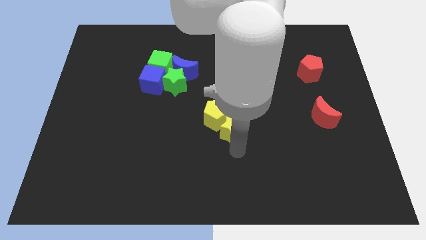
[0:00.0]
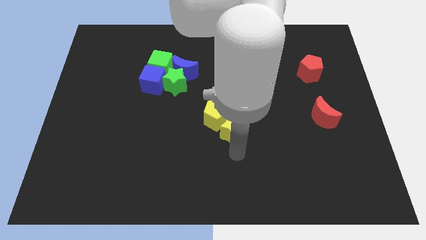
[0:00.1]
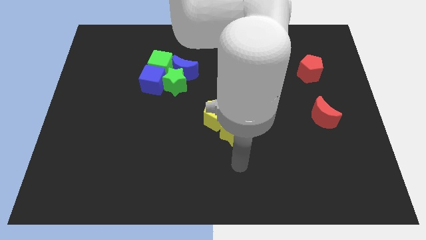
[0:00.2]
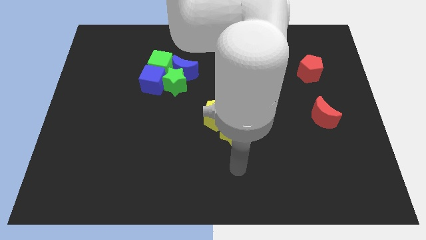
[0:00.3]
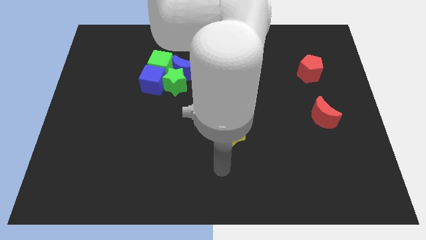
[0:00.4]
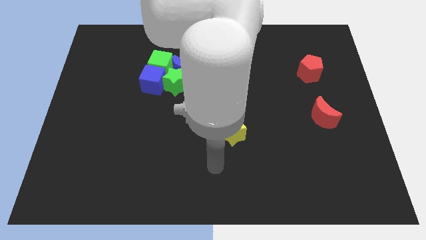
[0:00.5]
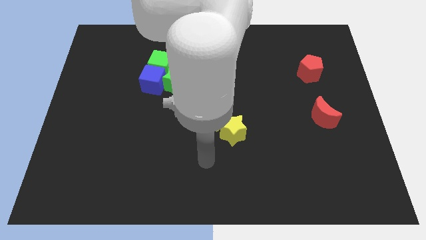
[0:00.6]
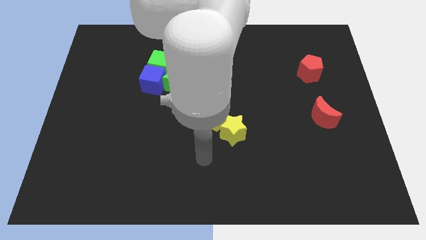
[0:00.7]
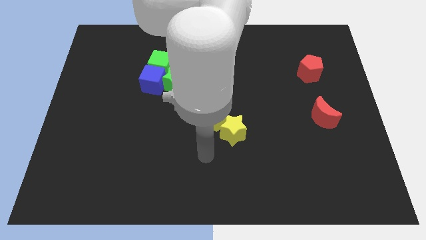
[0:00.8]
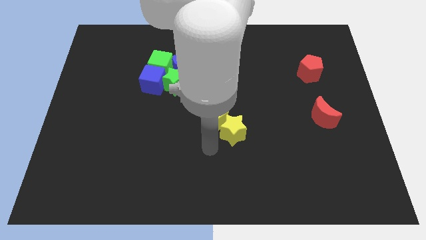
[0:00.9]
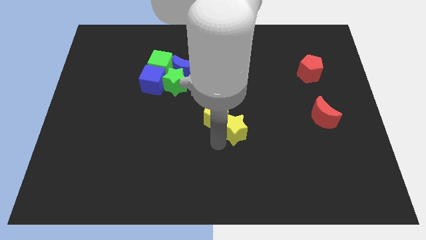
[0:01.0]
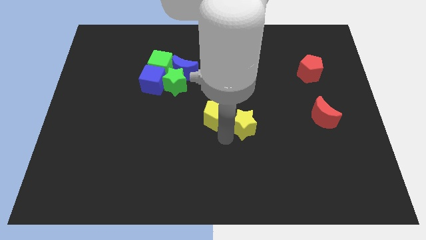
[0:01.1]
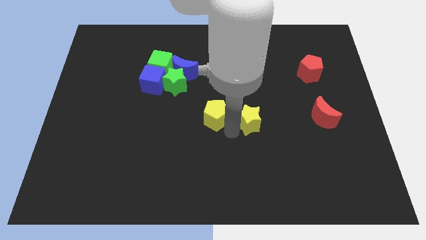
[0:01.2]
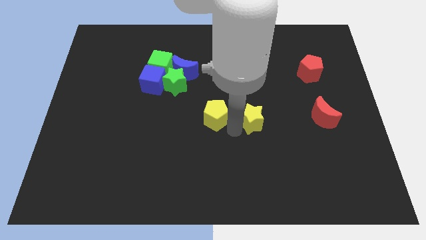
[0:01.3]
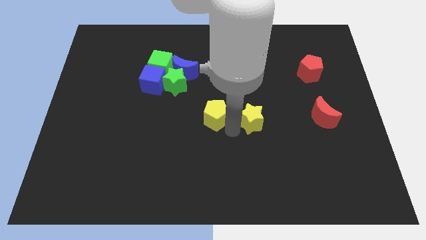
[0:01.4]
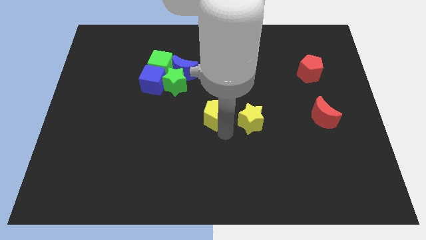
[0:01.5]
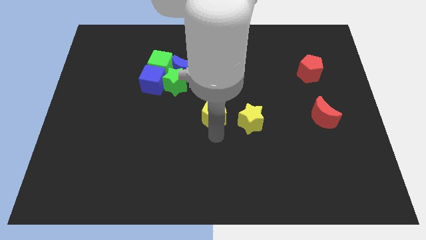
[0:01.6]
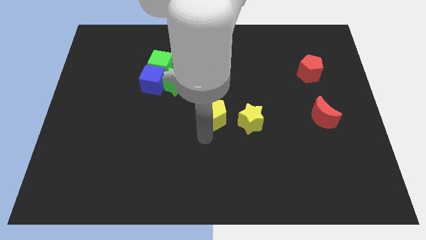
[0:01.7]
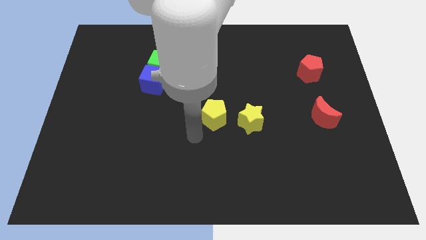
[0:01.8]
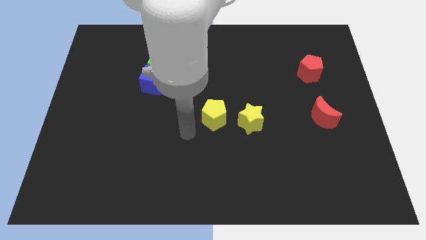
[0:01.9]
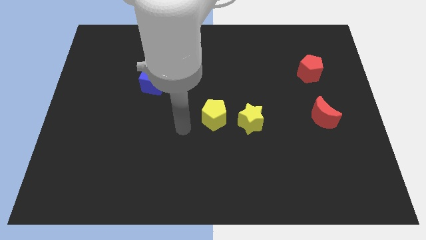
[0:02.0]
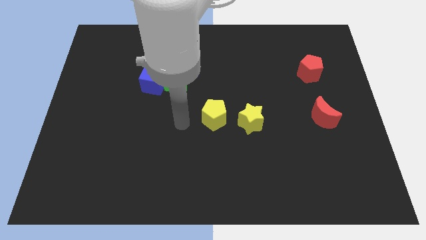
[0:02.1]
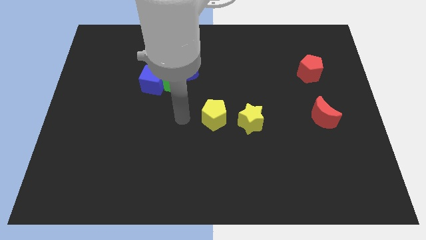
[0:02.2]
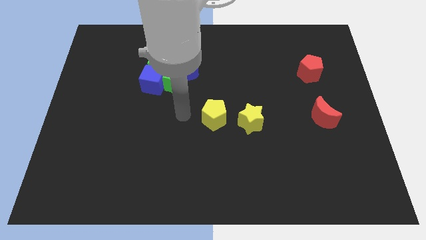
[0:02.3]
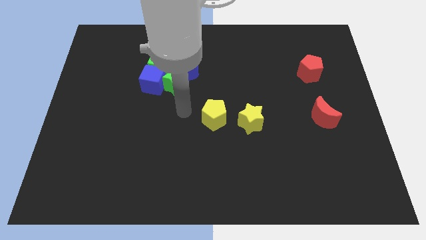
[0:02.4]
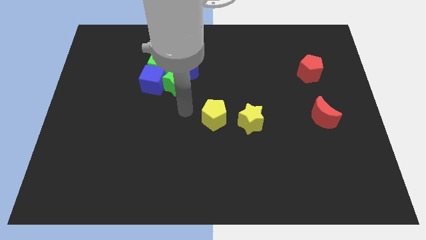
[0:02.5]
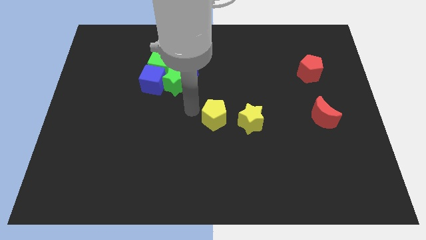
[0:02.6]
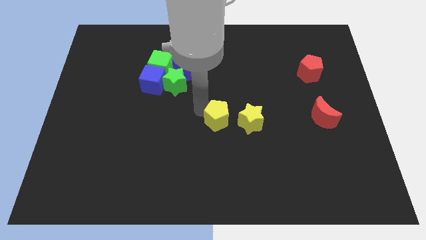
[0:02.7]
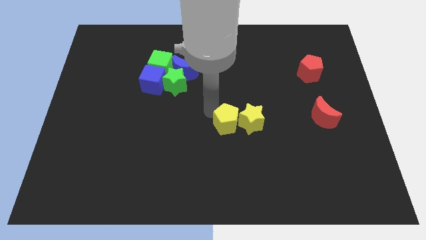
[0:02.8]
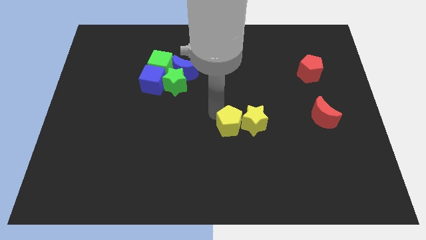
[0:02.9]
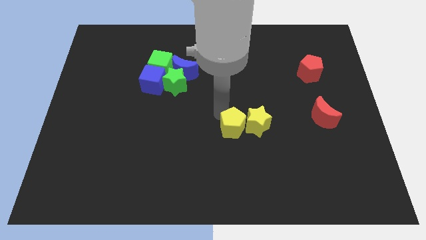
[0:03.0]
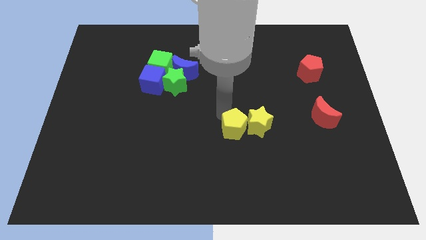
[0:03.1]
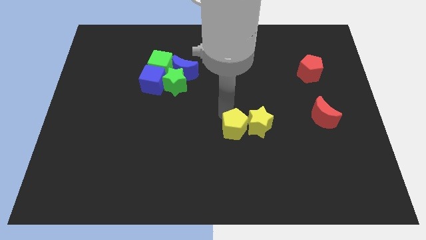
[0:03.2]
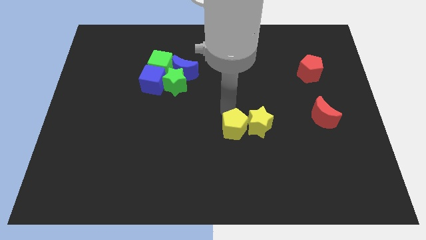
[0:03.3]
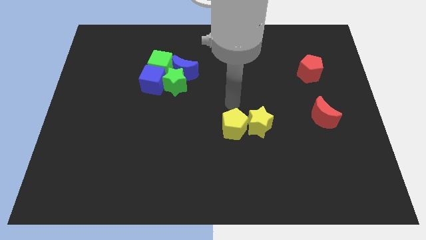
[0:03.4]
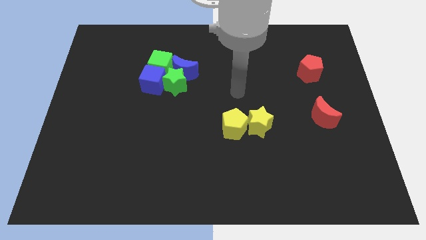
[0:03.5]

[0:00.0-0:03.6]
push the yellow pentagon into the yellow star

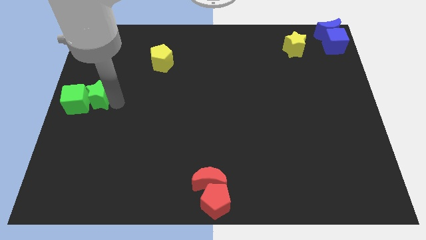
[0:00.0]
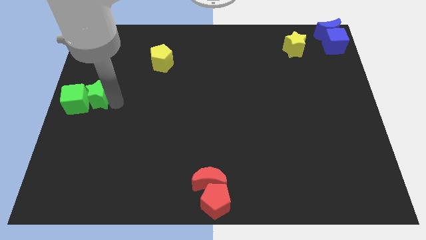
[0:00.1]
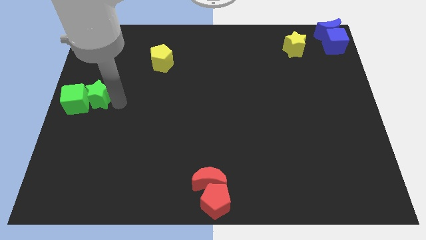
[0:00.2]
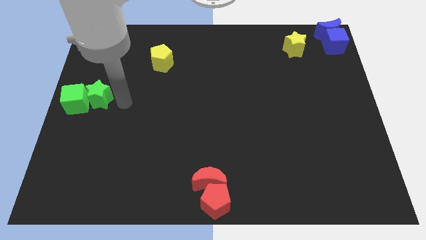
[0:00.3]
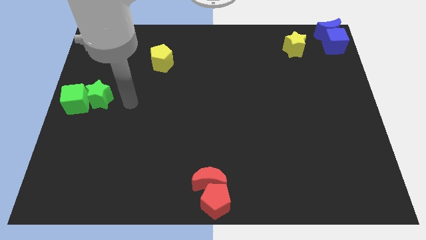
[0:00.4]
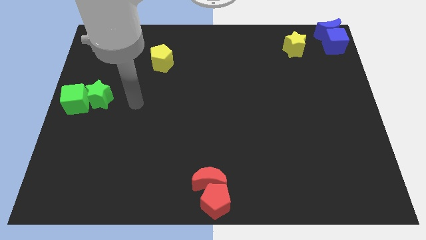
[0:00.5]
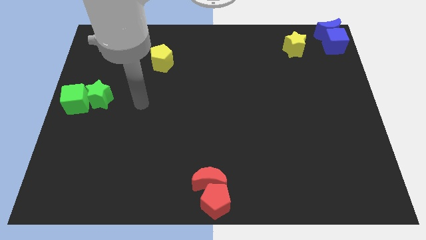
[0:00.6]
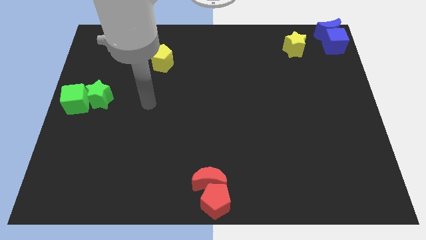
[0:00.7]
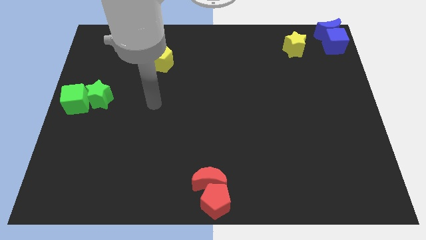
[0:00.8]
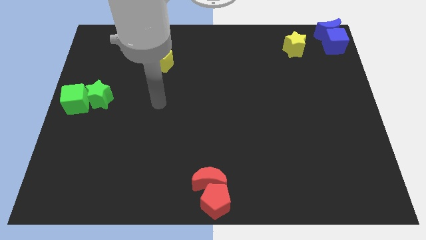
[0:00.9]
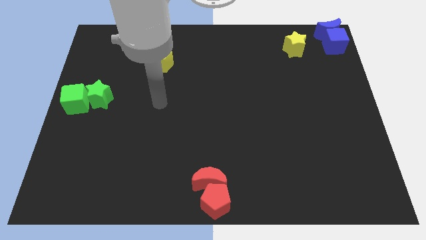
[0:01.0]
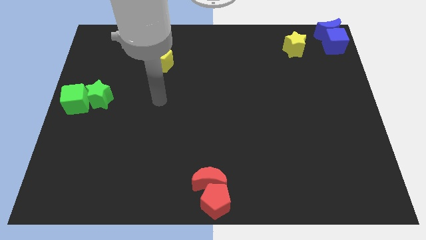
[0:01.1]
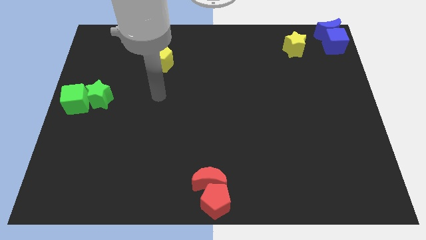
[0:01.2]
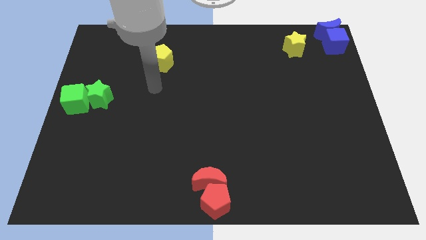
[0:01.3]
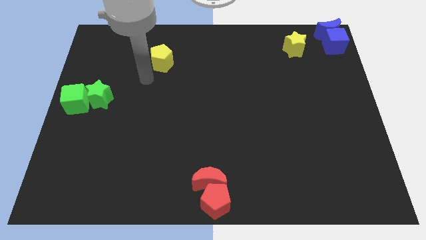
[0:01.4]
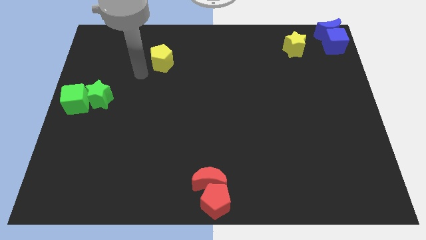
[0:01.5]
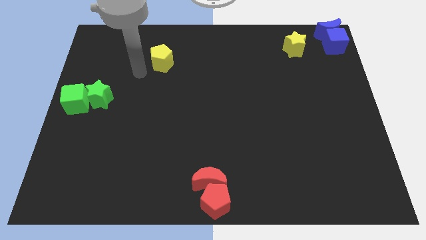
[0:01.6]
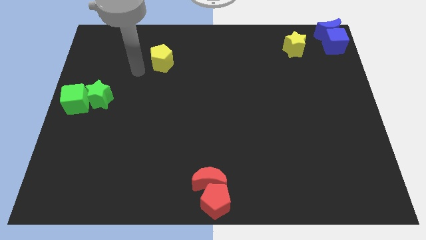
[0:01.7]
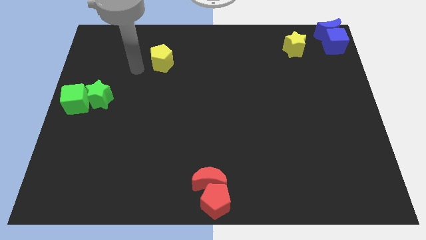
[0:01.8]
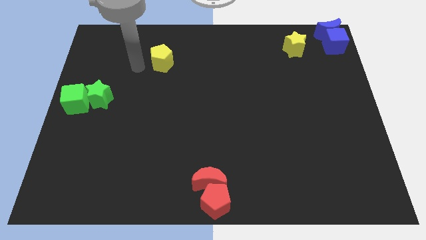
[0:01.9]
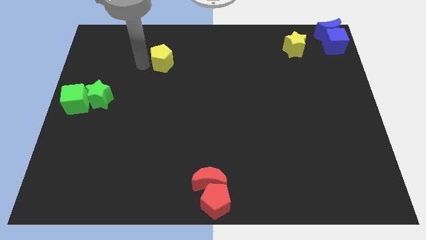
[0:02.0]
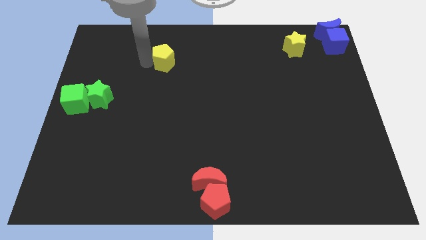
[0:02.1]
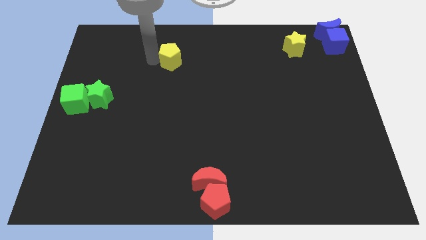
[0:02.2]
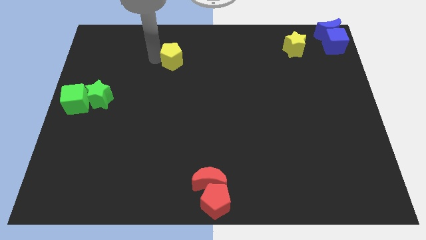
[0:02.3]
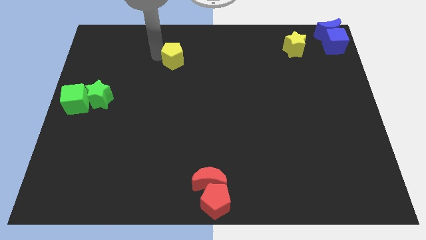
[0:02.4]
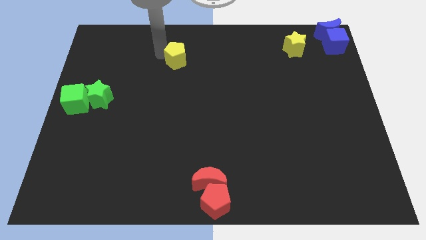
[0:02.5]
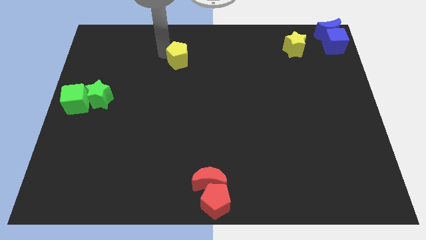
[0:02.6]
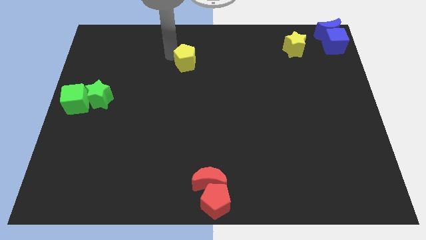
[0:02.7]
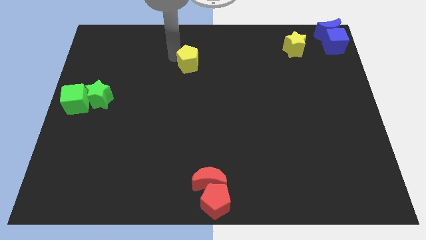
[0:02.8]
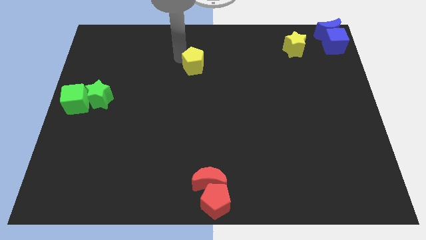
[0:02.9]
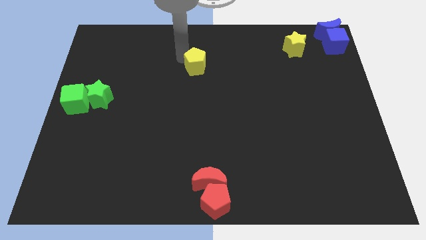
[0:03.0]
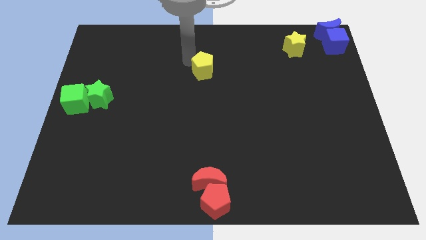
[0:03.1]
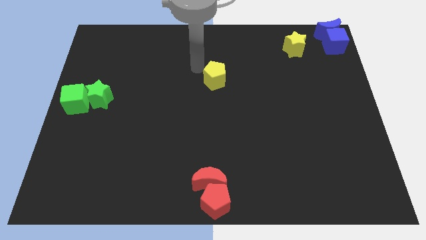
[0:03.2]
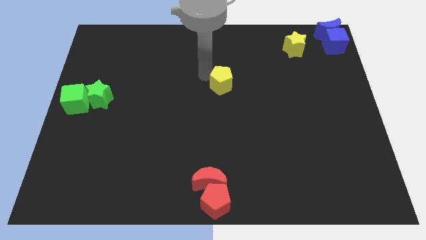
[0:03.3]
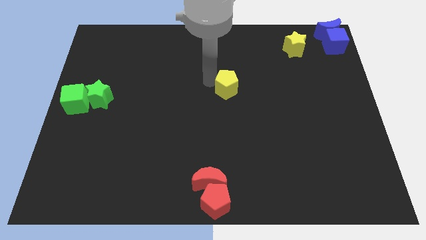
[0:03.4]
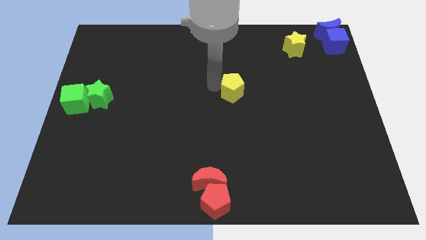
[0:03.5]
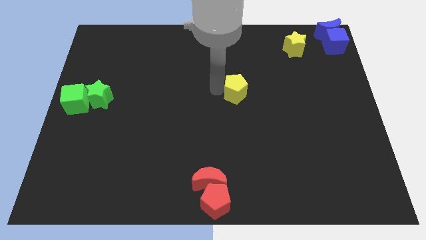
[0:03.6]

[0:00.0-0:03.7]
move the yellow pentagon towards the top center of the board

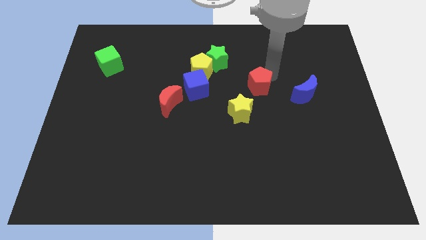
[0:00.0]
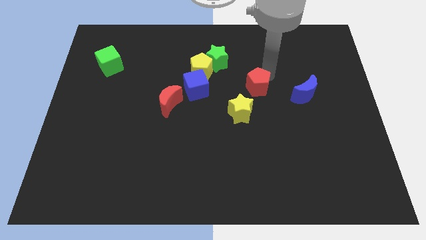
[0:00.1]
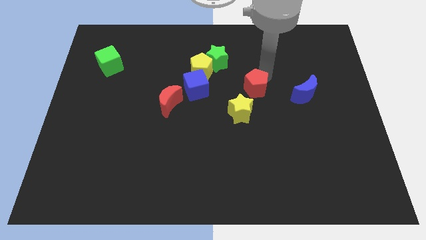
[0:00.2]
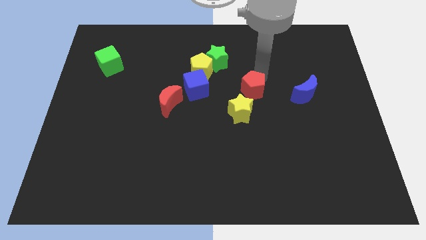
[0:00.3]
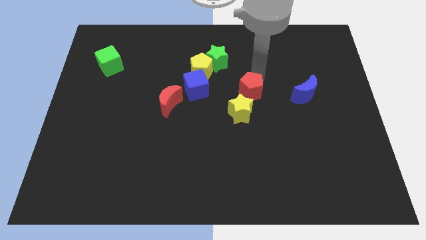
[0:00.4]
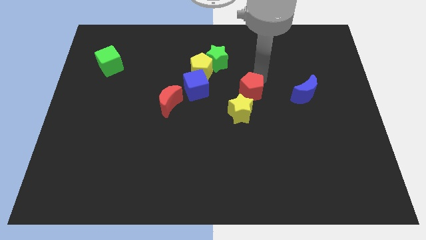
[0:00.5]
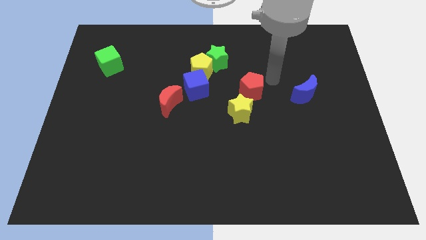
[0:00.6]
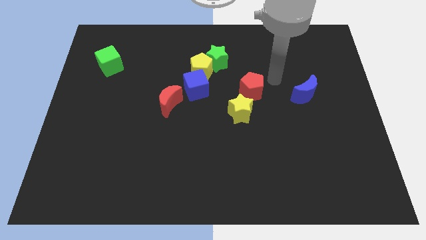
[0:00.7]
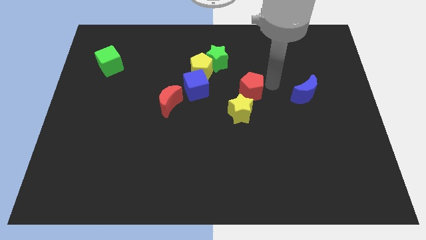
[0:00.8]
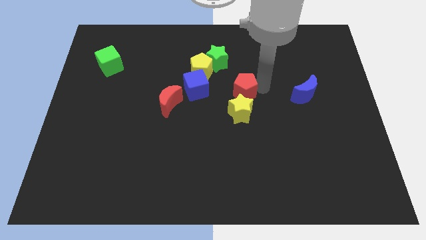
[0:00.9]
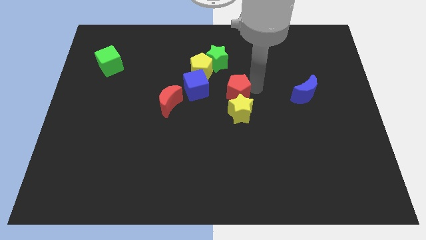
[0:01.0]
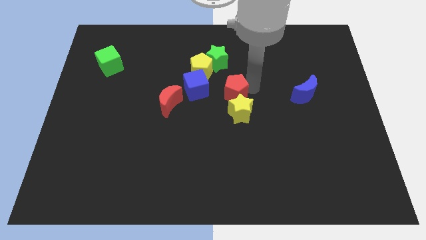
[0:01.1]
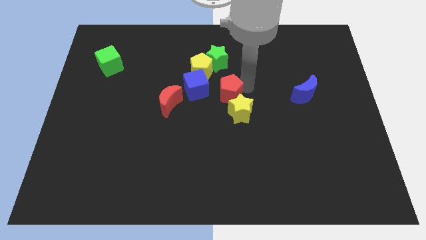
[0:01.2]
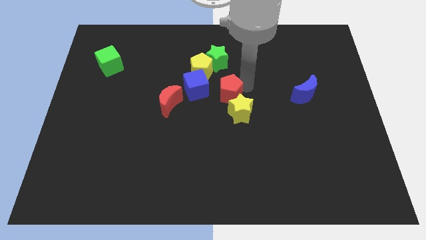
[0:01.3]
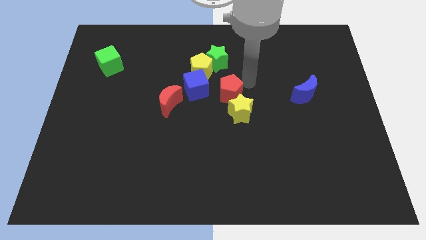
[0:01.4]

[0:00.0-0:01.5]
push the red pentagon to the right of the blue cube

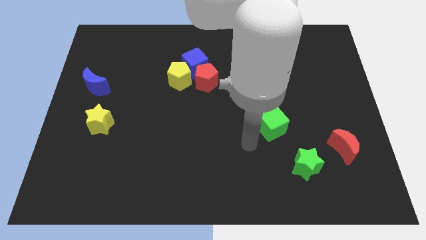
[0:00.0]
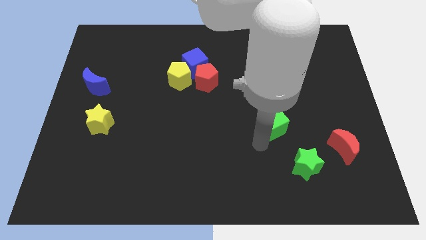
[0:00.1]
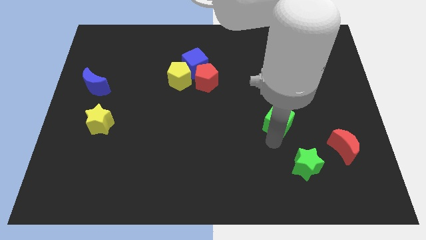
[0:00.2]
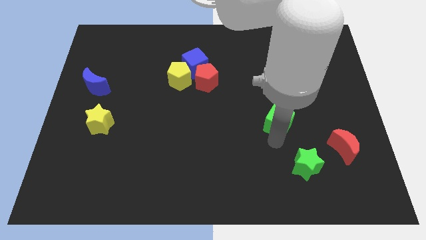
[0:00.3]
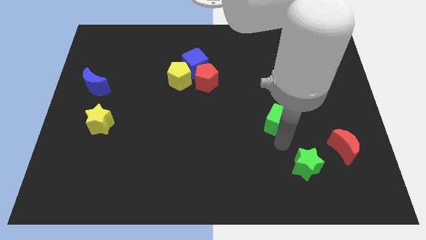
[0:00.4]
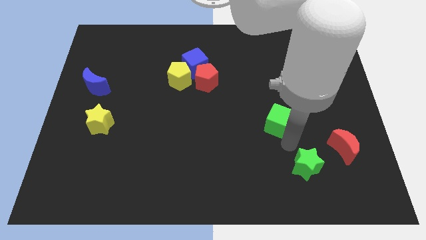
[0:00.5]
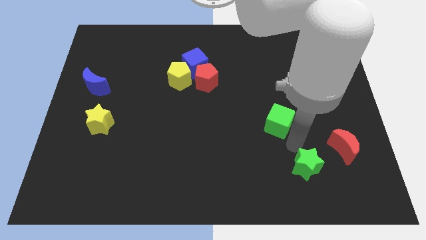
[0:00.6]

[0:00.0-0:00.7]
point your arm in between the green blocks
